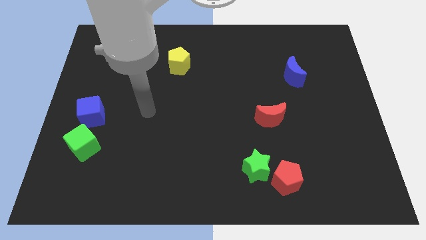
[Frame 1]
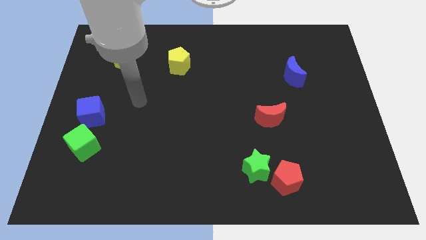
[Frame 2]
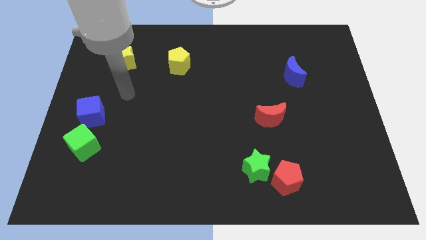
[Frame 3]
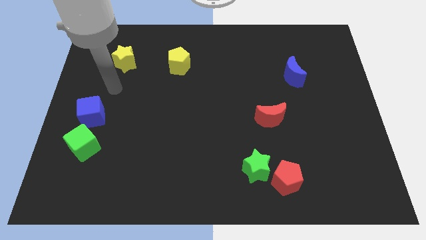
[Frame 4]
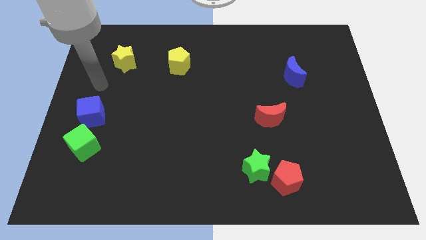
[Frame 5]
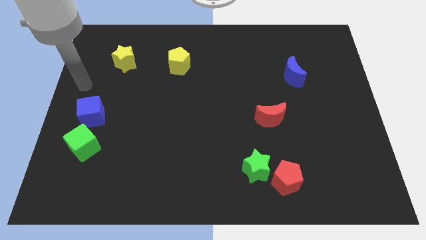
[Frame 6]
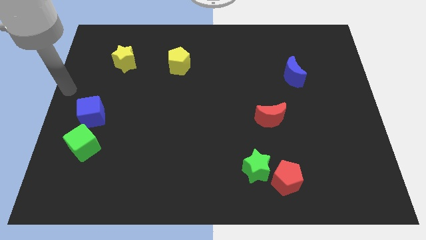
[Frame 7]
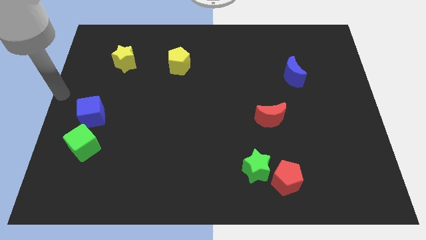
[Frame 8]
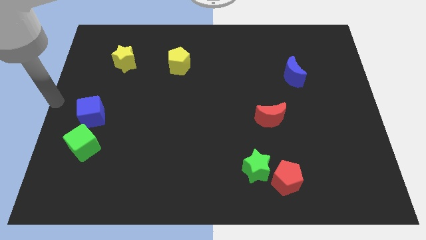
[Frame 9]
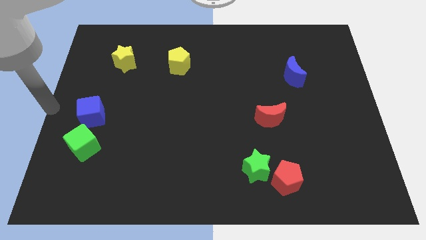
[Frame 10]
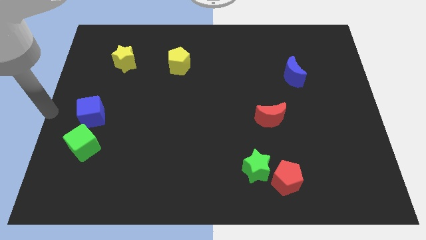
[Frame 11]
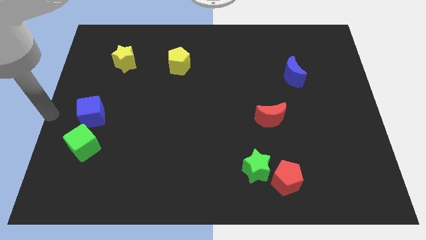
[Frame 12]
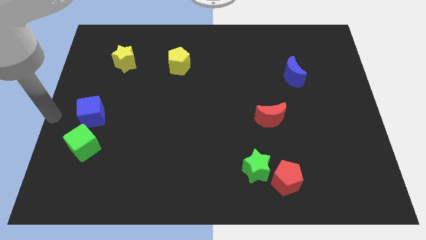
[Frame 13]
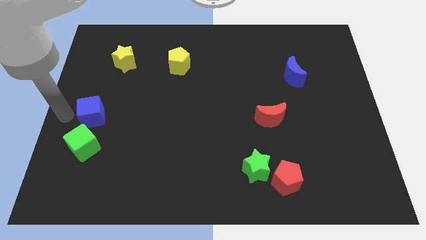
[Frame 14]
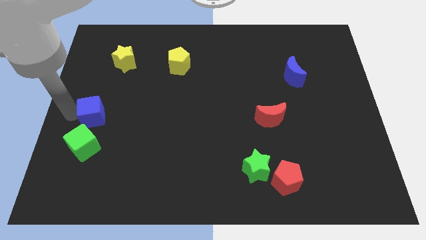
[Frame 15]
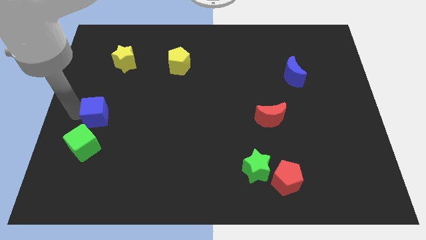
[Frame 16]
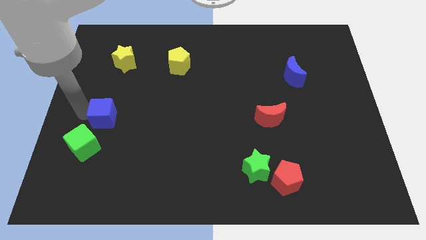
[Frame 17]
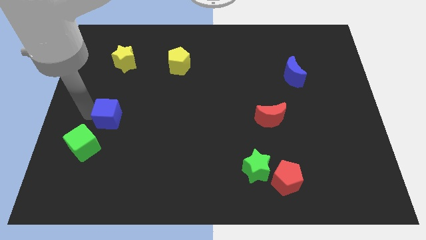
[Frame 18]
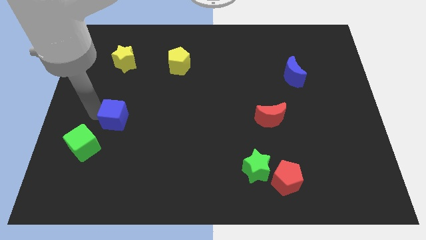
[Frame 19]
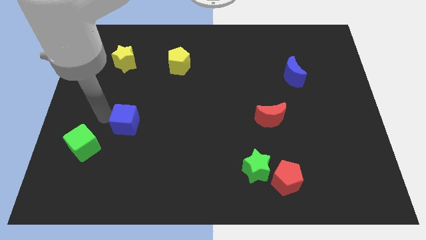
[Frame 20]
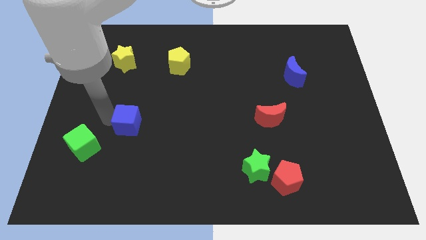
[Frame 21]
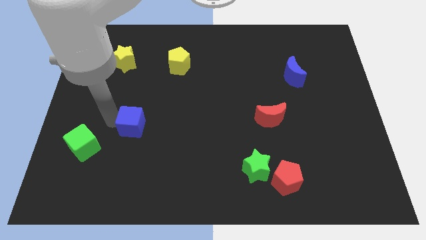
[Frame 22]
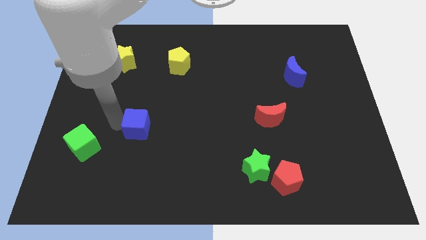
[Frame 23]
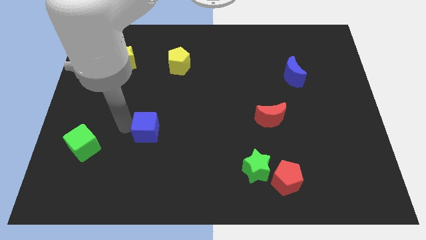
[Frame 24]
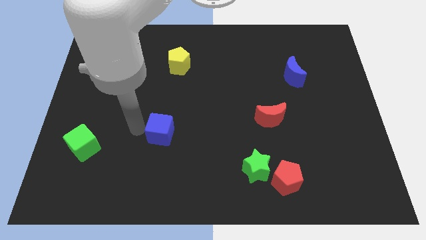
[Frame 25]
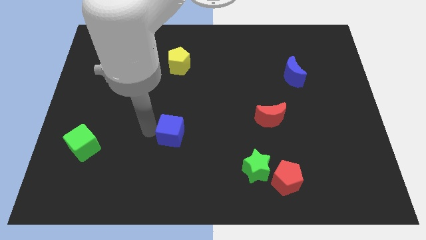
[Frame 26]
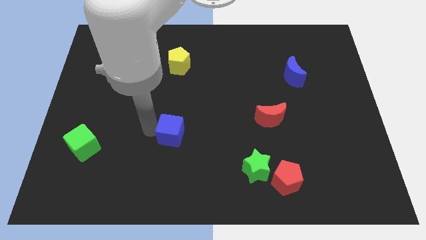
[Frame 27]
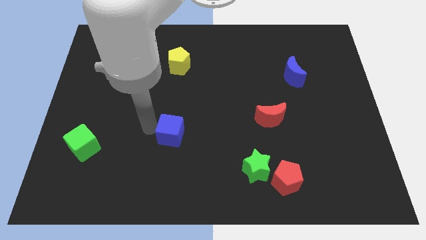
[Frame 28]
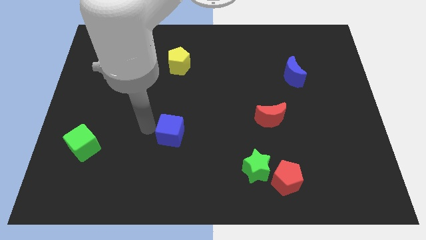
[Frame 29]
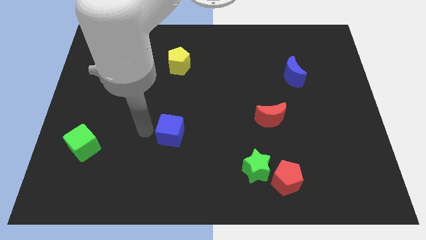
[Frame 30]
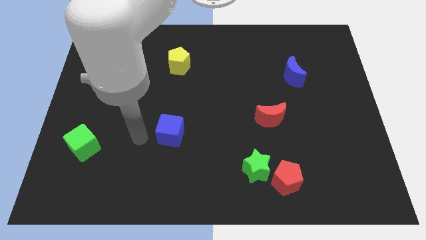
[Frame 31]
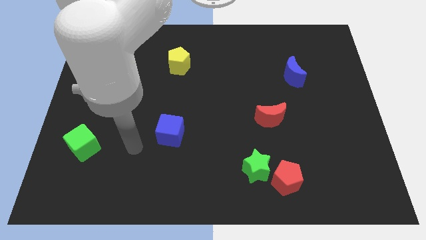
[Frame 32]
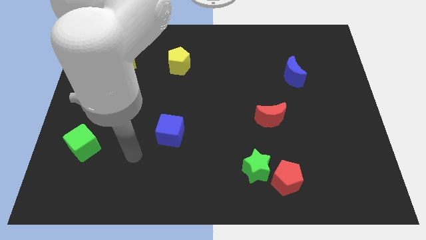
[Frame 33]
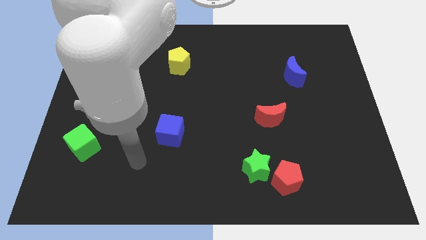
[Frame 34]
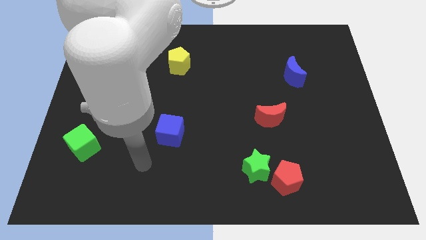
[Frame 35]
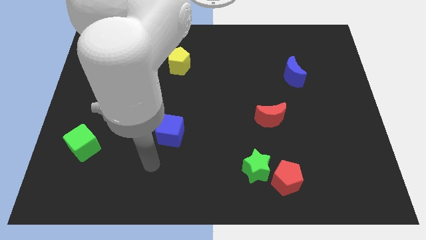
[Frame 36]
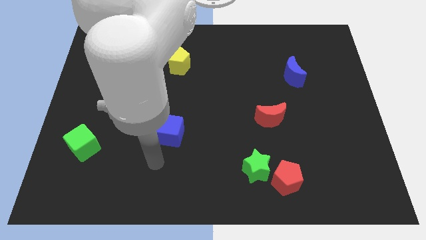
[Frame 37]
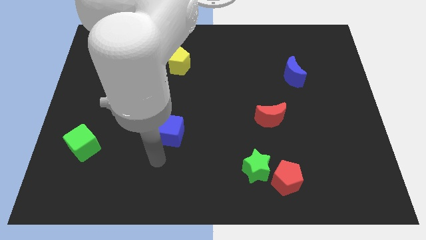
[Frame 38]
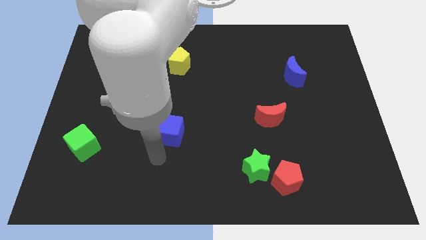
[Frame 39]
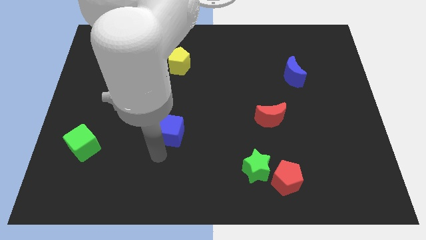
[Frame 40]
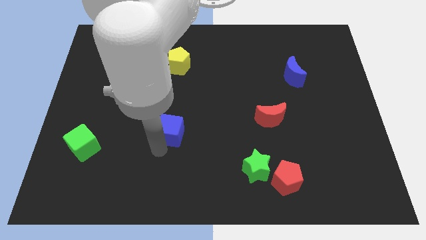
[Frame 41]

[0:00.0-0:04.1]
place the blue cube to the right of the green cube

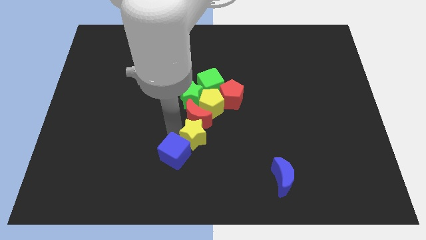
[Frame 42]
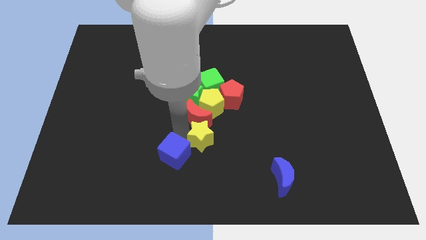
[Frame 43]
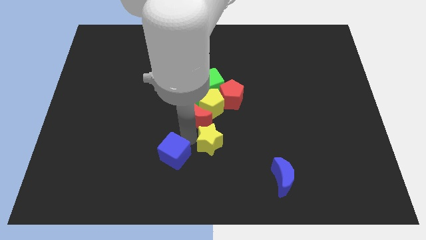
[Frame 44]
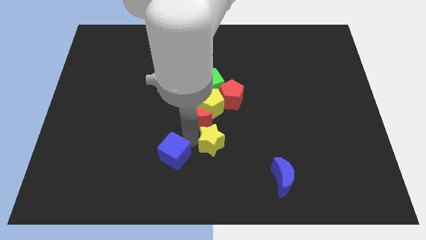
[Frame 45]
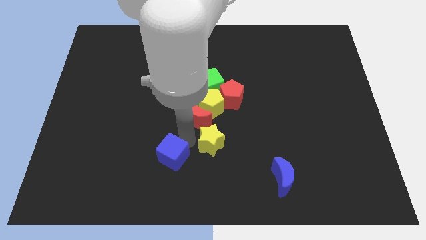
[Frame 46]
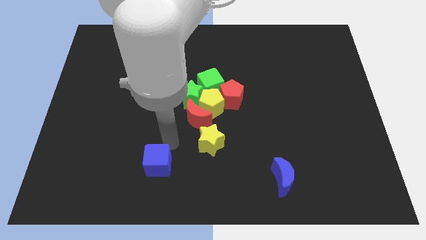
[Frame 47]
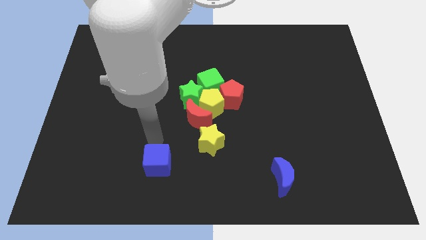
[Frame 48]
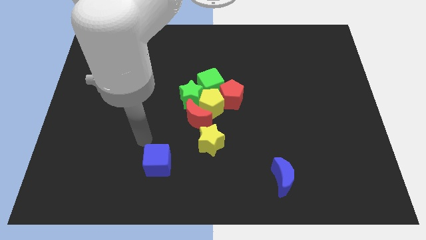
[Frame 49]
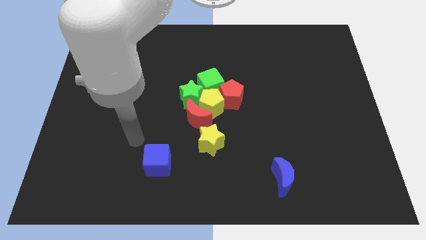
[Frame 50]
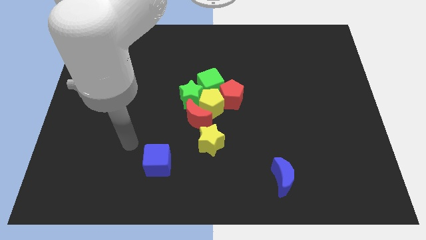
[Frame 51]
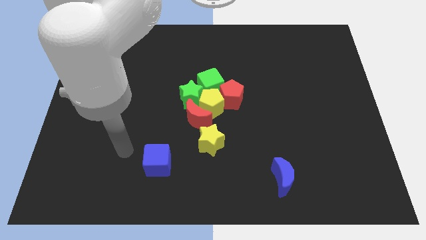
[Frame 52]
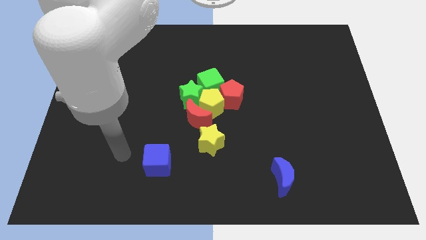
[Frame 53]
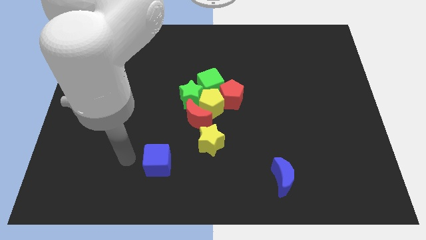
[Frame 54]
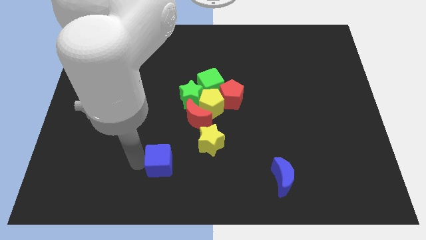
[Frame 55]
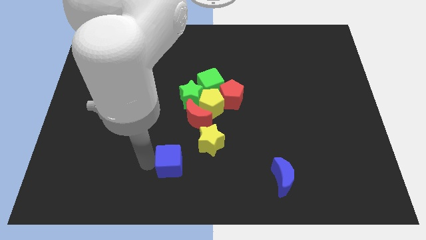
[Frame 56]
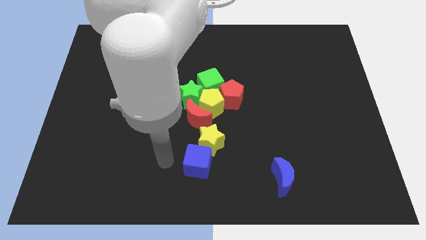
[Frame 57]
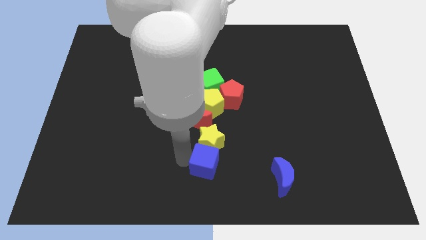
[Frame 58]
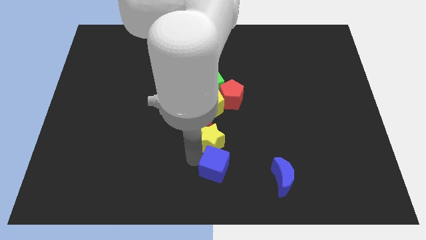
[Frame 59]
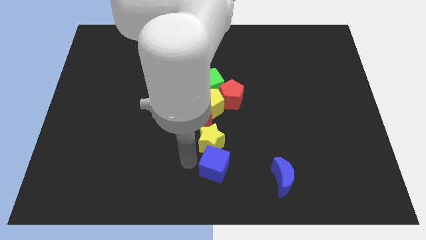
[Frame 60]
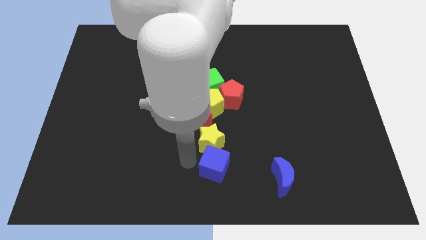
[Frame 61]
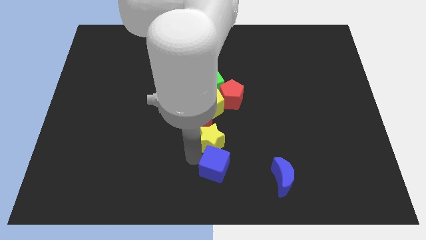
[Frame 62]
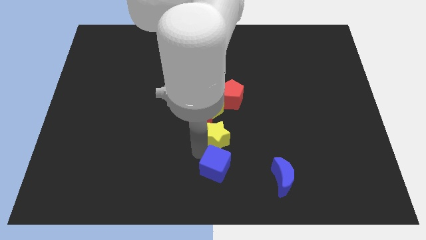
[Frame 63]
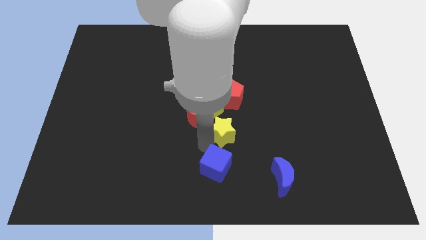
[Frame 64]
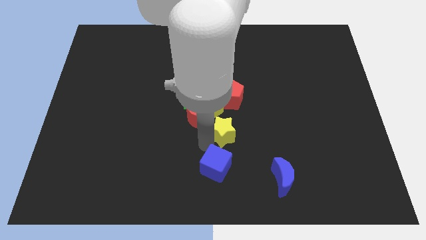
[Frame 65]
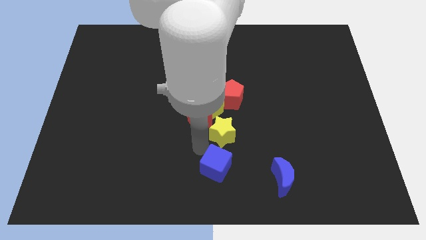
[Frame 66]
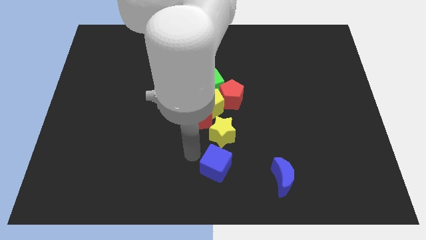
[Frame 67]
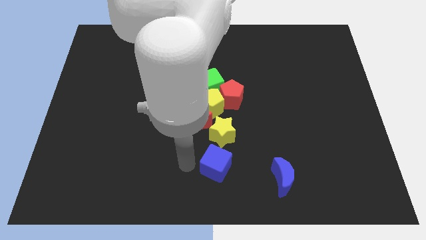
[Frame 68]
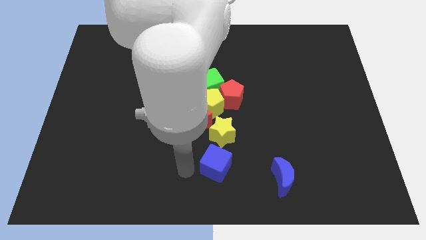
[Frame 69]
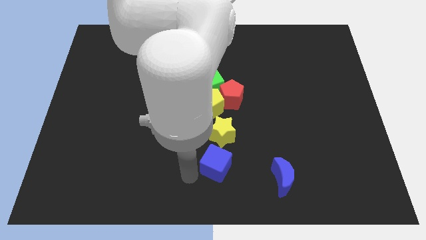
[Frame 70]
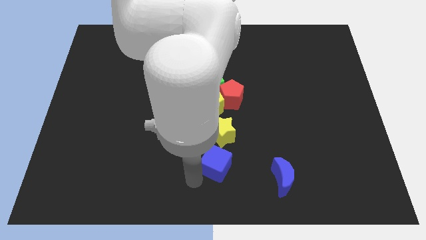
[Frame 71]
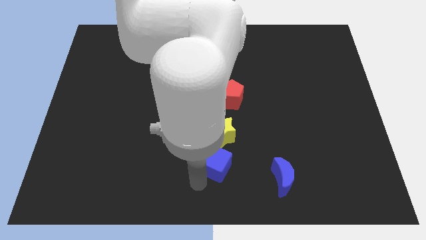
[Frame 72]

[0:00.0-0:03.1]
move the blue cube towards the bottom of the yellow star

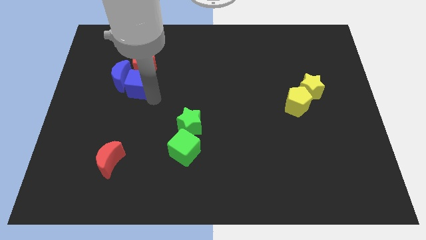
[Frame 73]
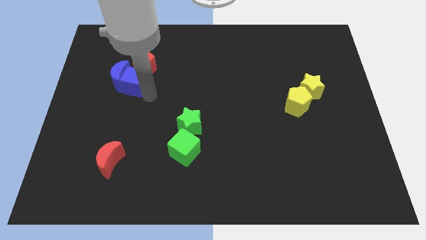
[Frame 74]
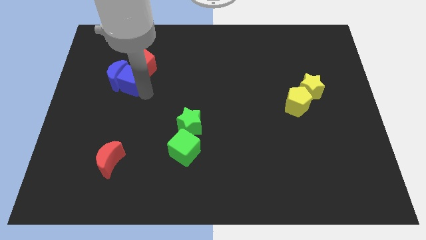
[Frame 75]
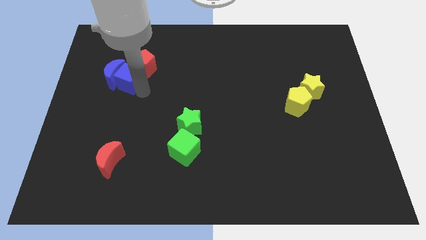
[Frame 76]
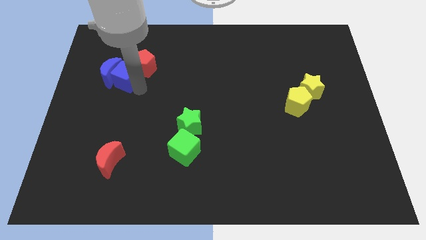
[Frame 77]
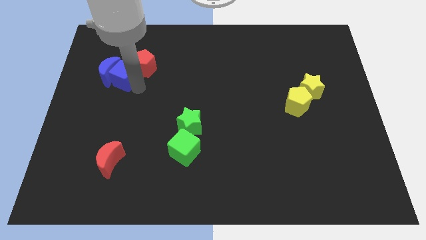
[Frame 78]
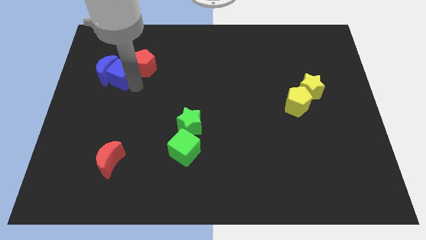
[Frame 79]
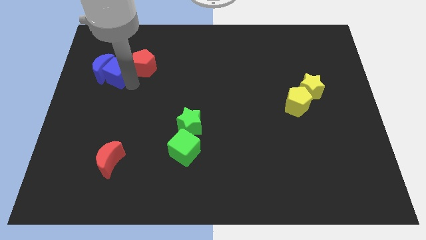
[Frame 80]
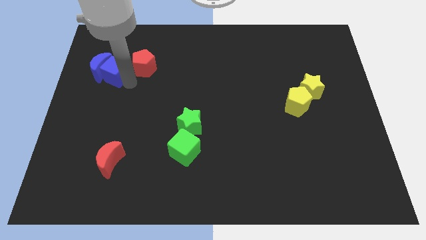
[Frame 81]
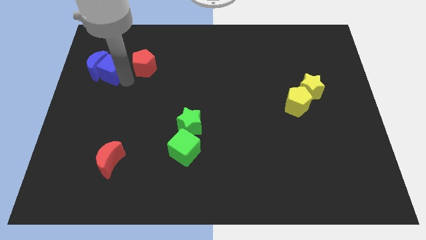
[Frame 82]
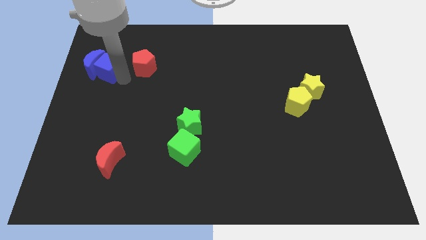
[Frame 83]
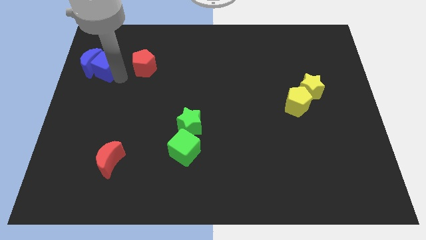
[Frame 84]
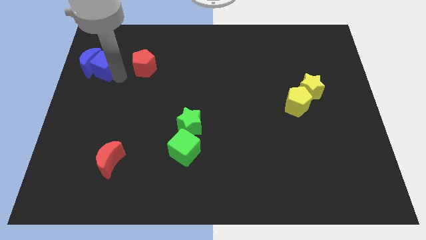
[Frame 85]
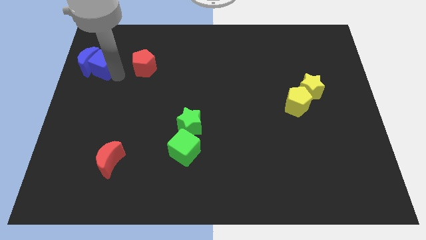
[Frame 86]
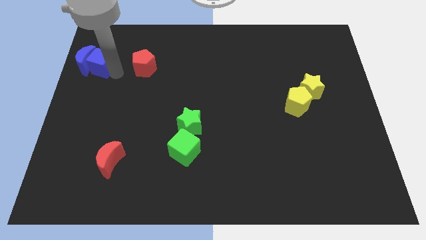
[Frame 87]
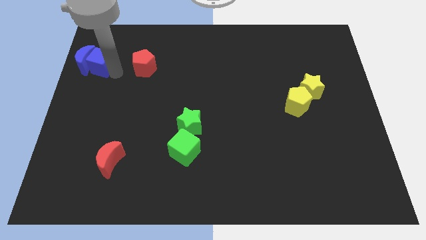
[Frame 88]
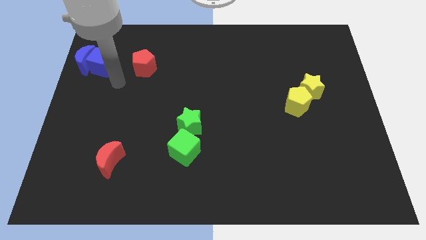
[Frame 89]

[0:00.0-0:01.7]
push the blue cube along with blue crescent towards the top left of the board
